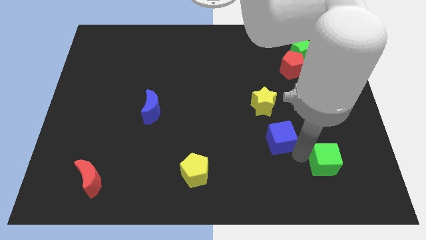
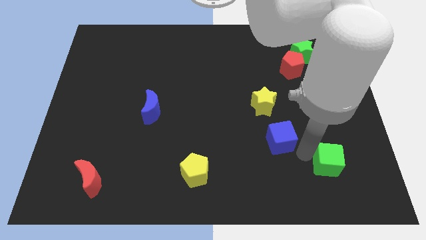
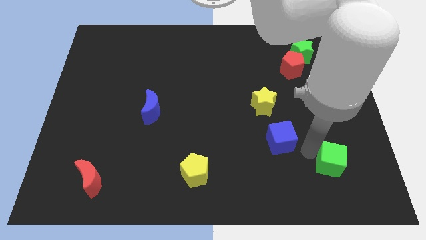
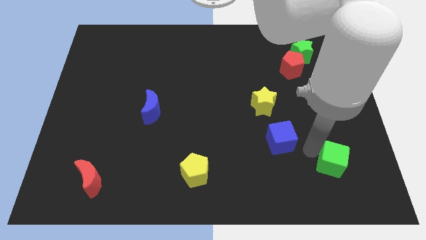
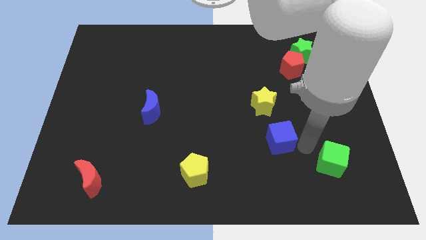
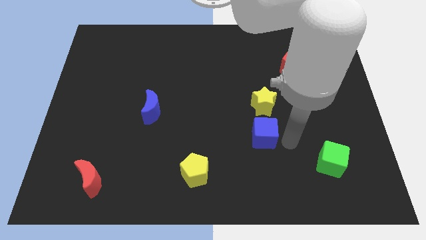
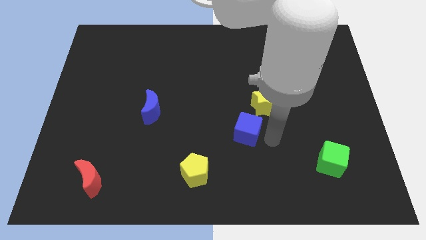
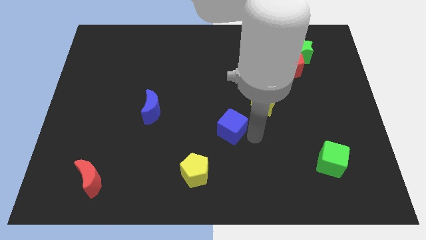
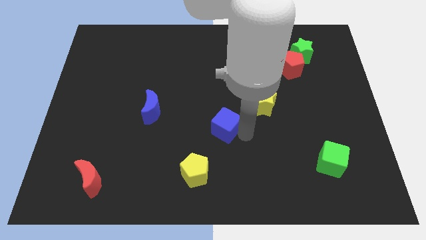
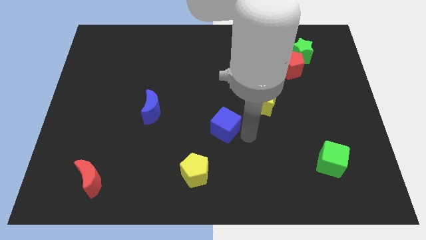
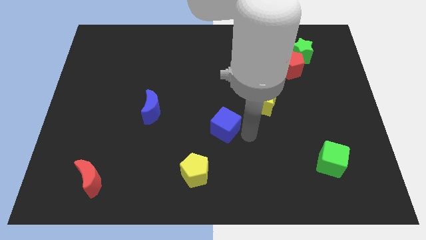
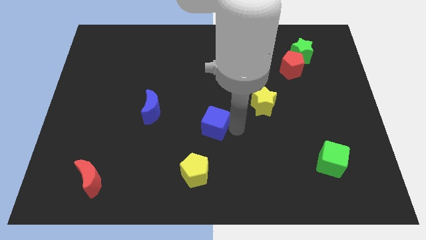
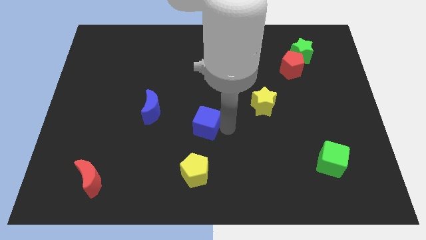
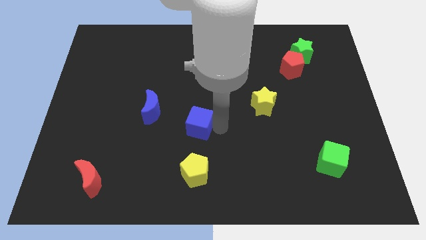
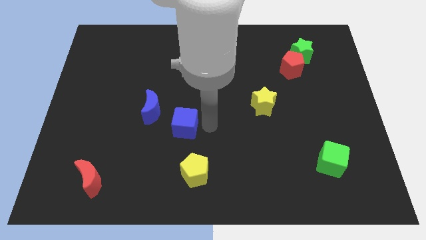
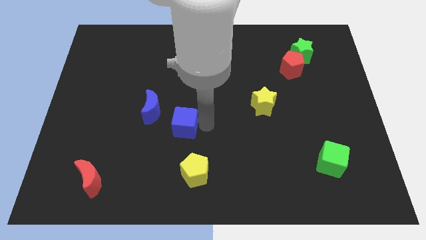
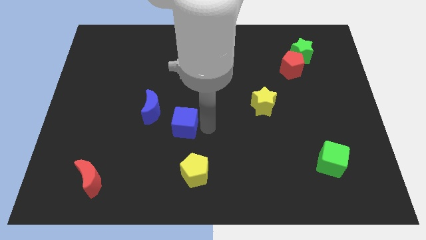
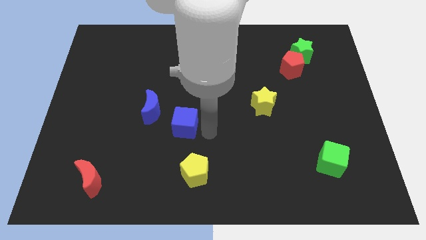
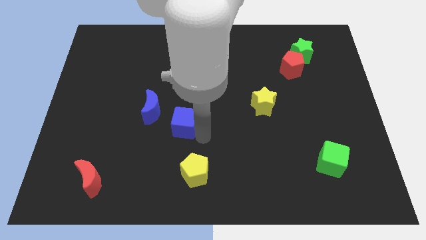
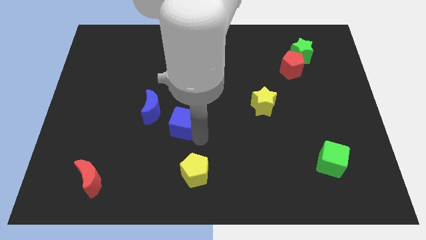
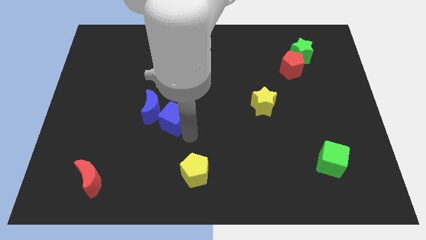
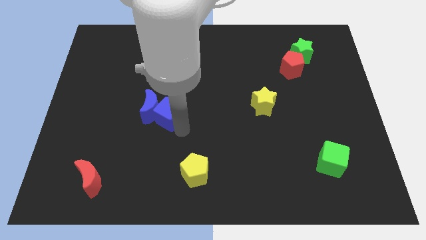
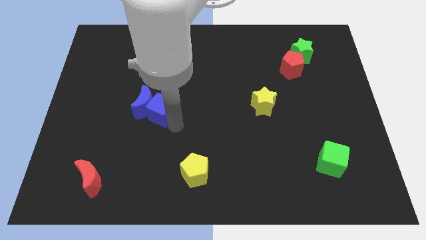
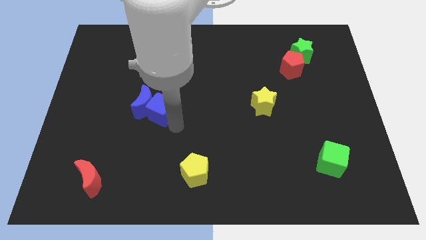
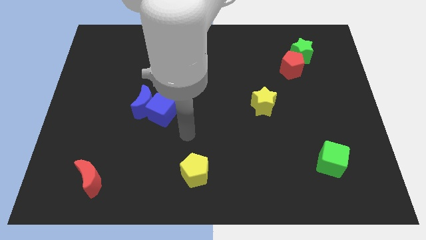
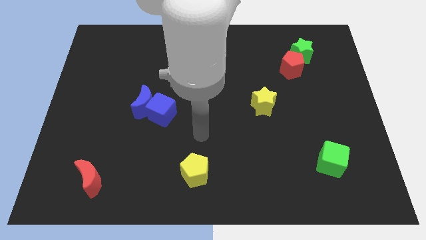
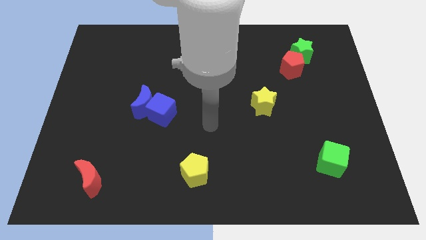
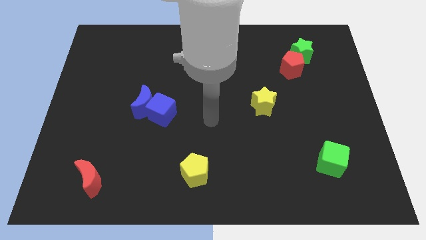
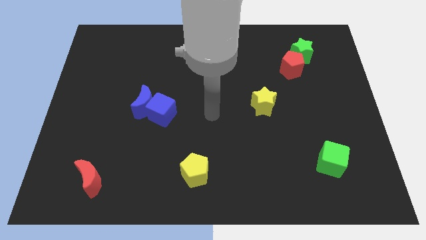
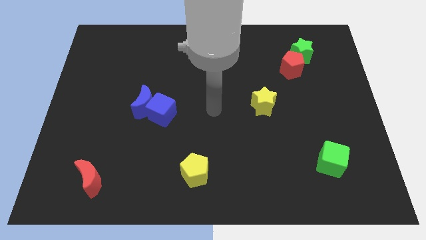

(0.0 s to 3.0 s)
push blue cube into the blue moon

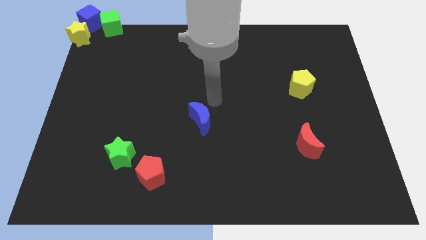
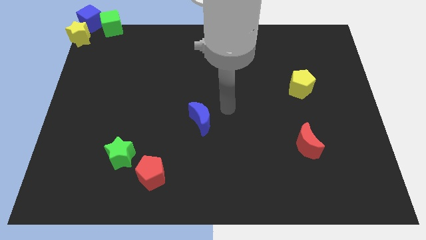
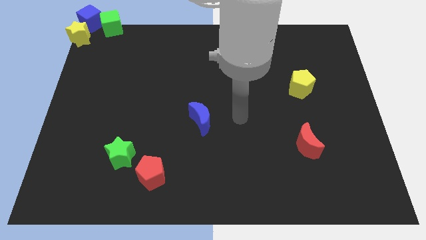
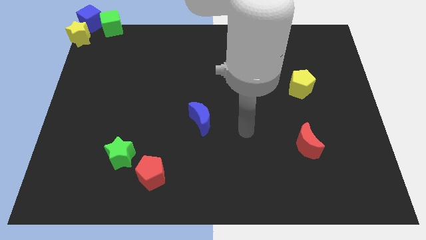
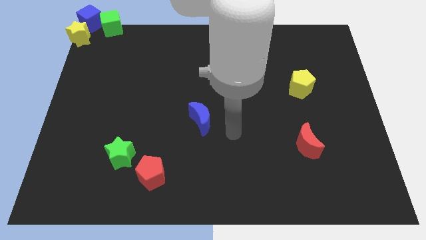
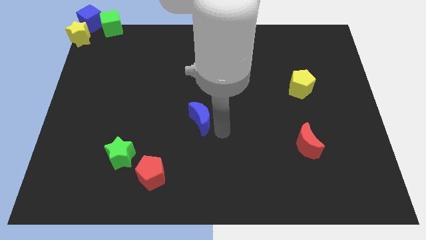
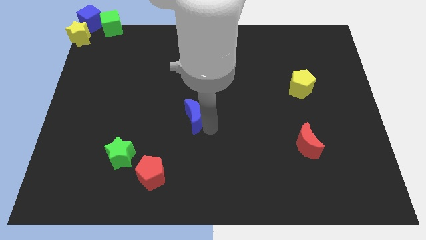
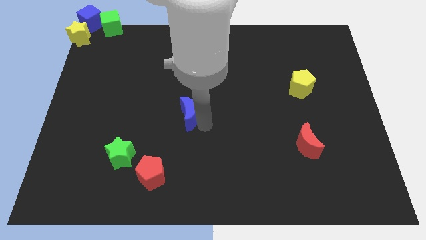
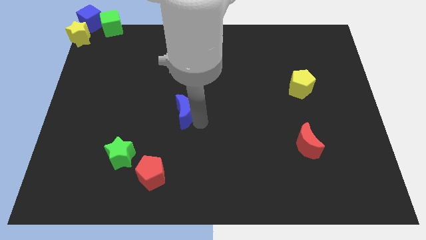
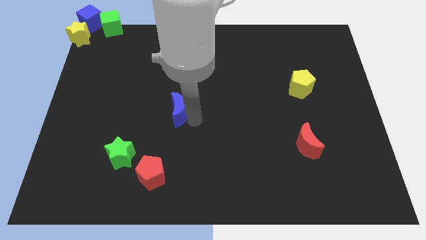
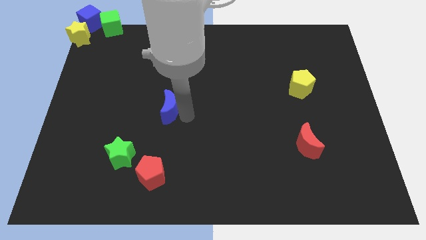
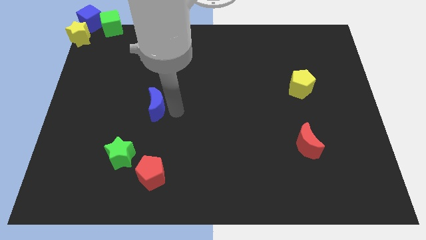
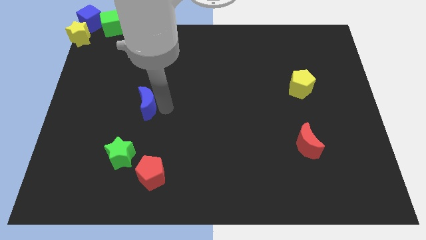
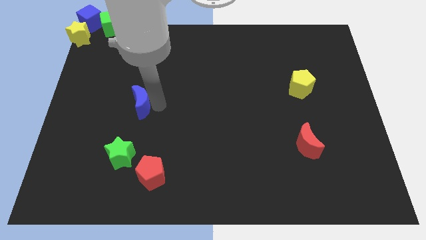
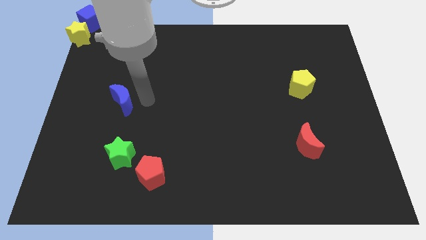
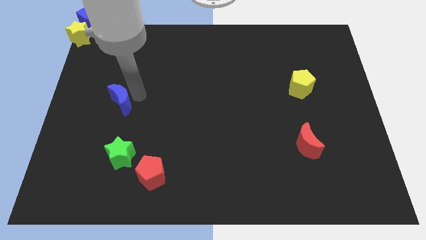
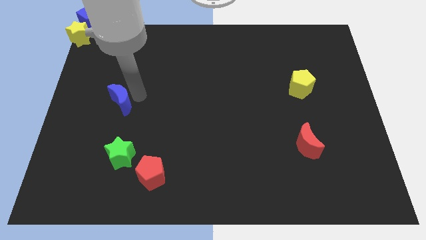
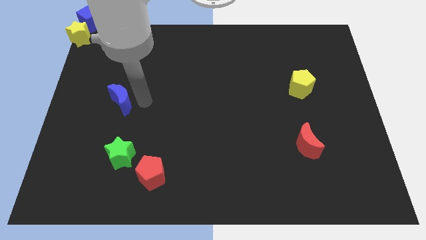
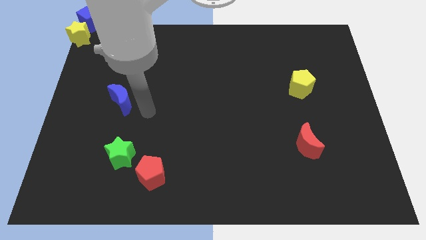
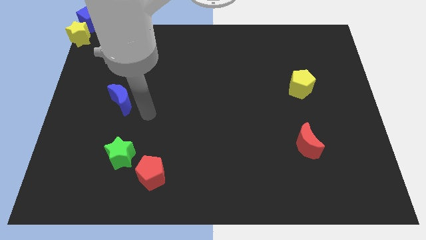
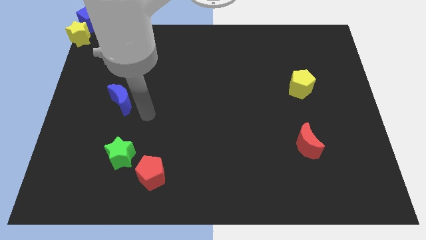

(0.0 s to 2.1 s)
move the blue moon above the green star

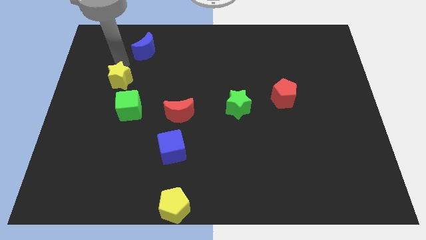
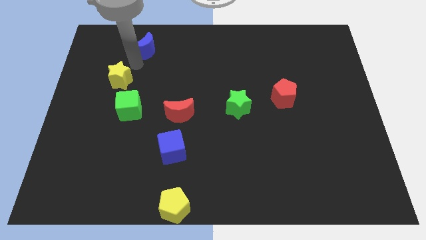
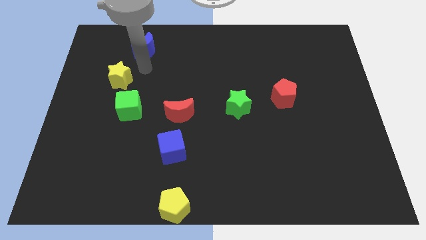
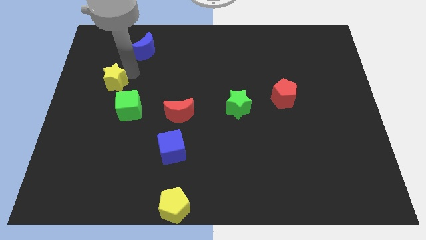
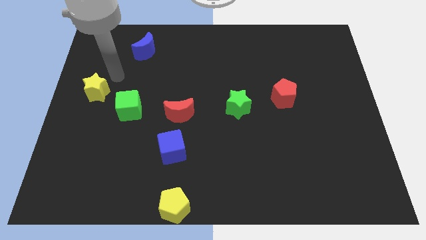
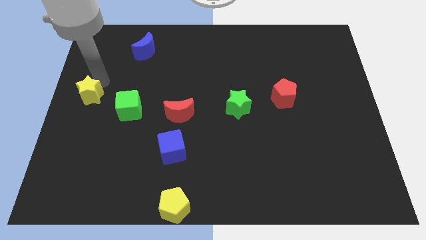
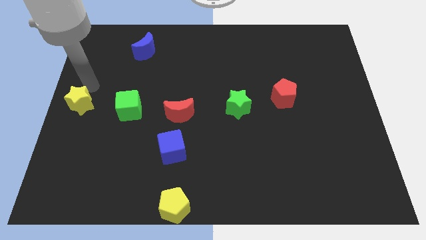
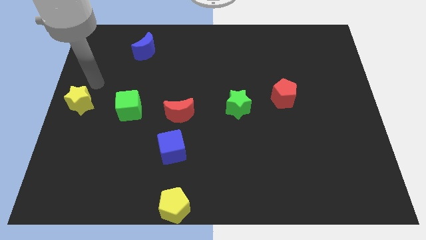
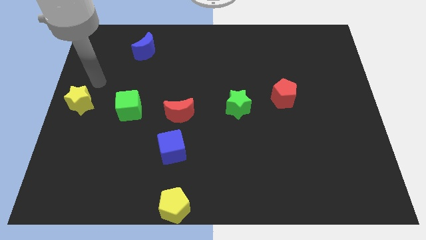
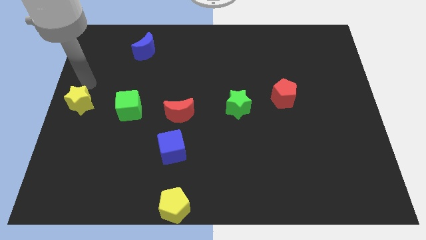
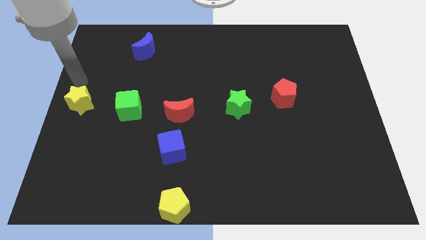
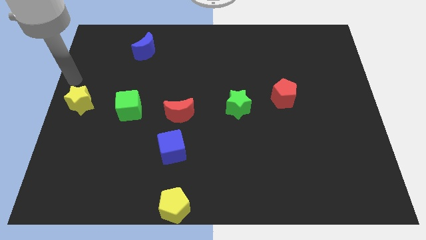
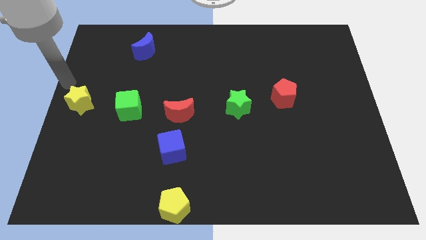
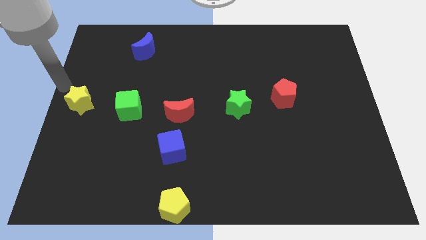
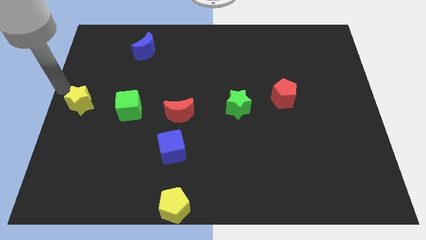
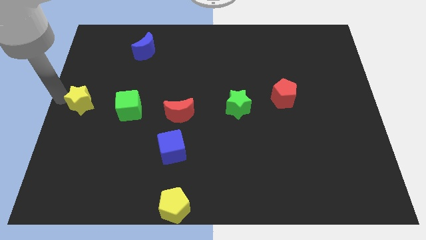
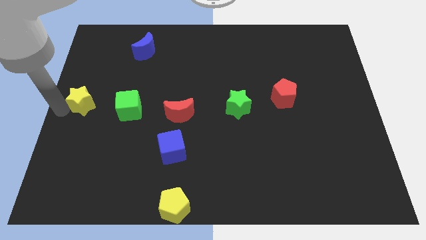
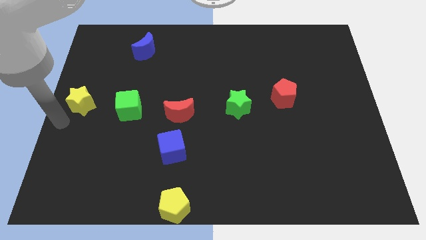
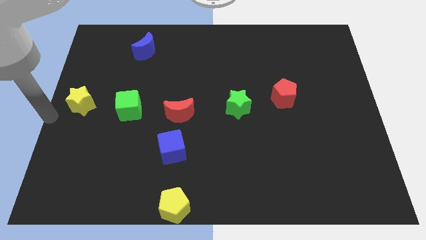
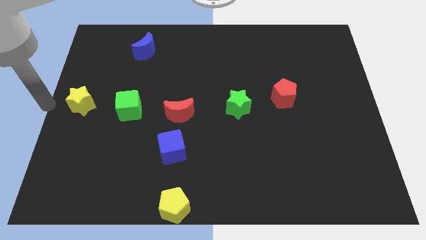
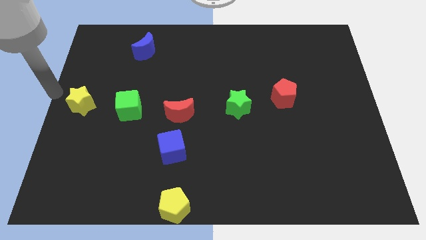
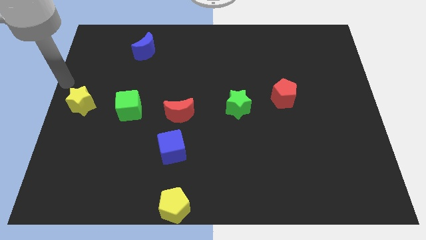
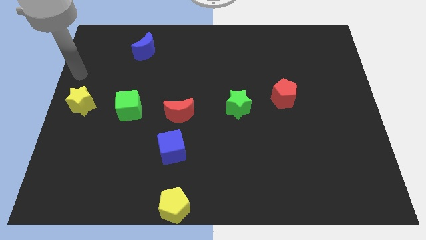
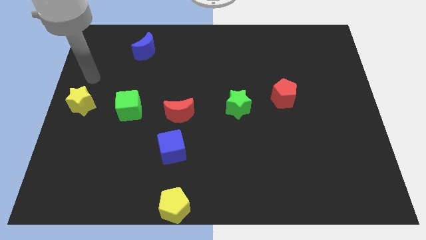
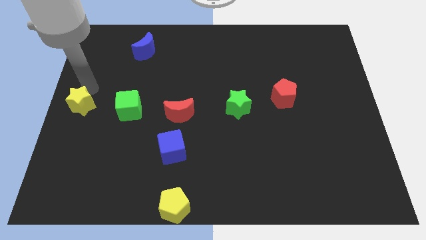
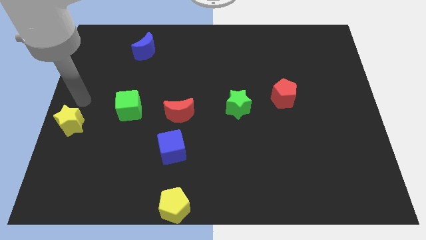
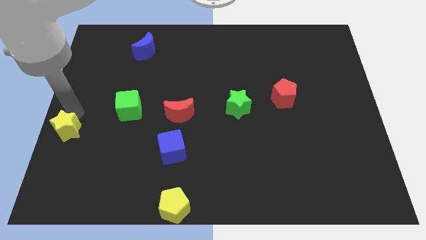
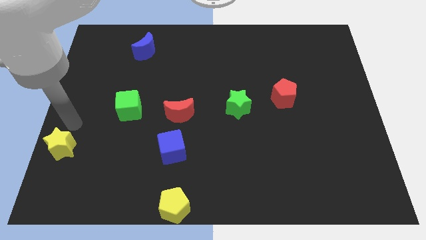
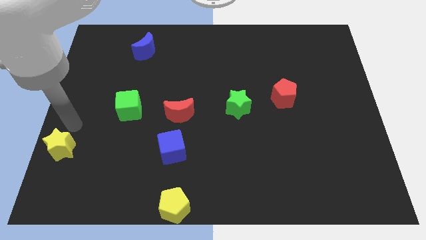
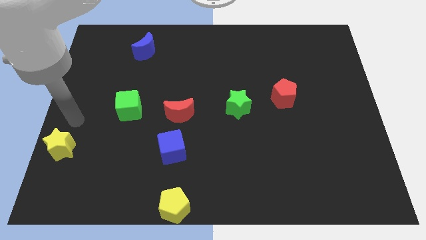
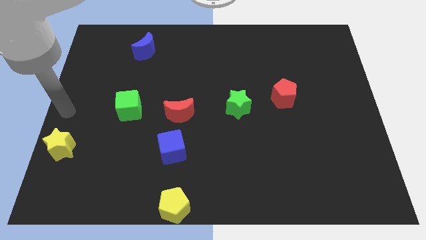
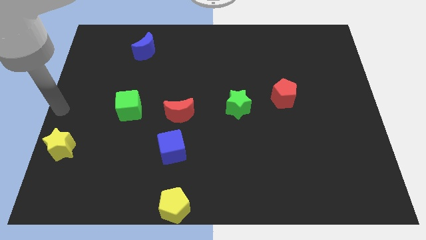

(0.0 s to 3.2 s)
move the yellow star left to the blue cube

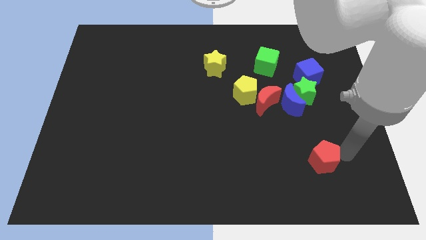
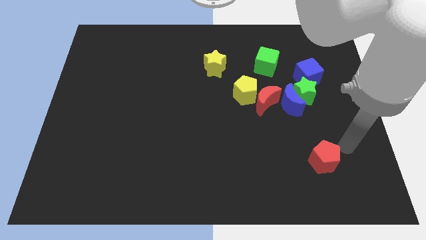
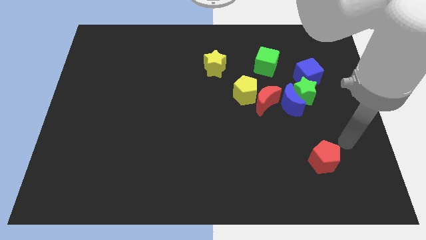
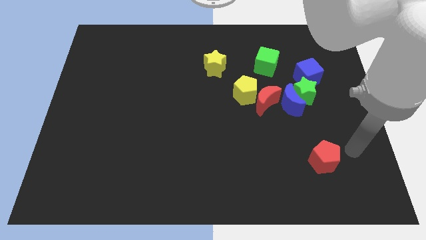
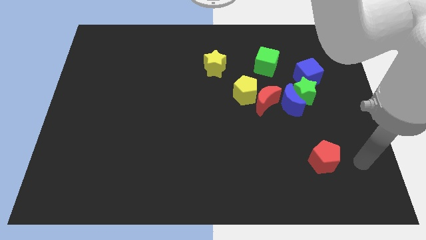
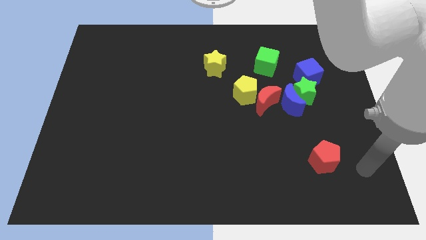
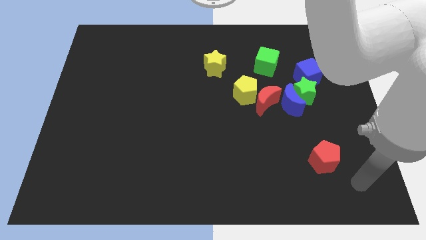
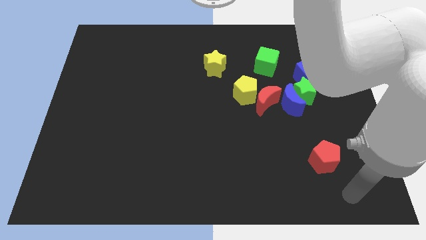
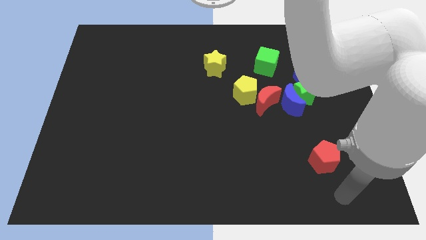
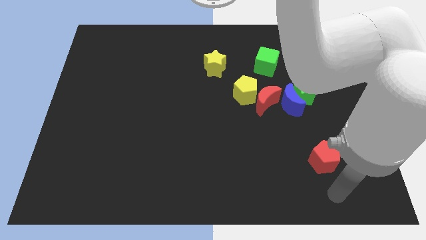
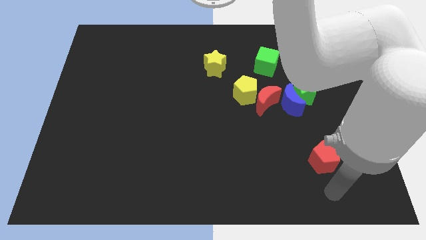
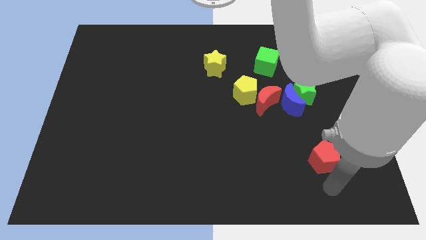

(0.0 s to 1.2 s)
point the arm below the red pentagon
